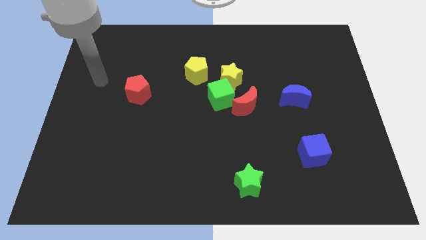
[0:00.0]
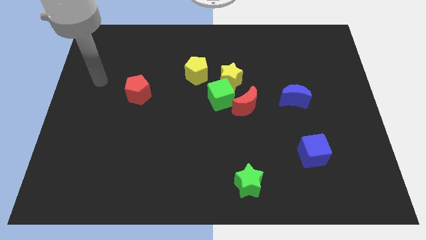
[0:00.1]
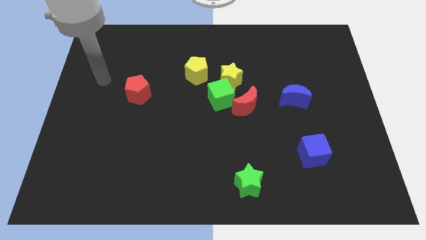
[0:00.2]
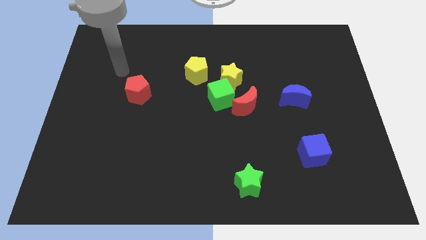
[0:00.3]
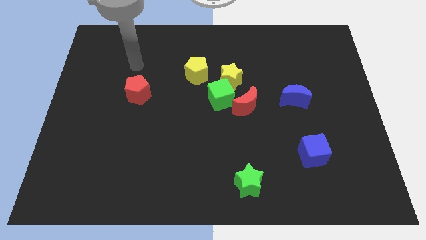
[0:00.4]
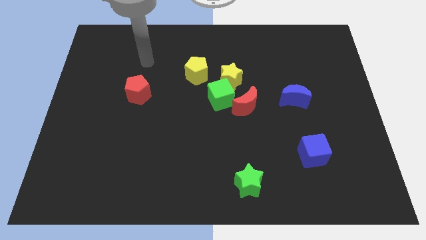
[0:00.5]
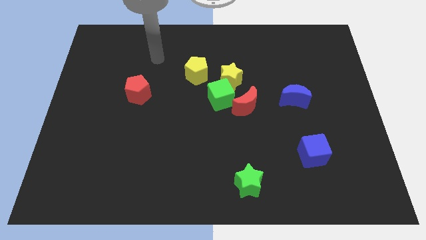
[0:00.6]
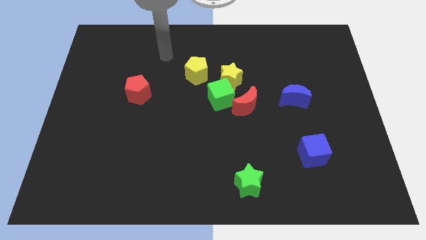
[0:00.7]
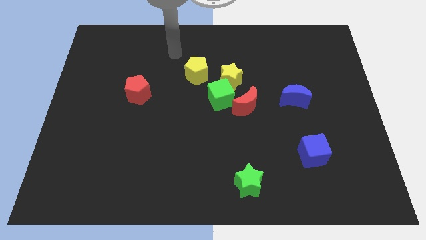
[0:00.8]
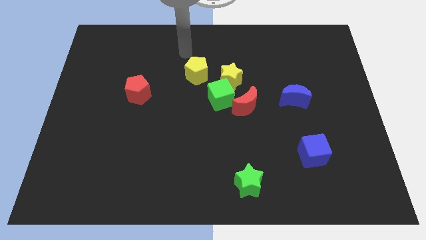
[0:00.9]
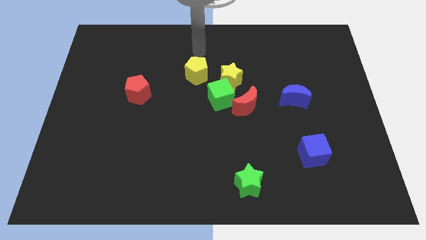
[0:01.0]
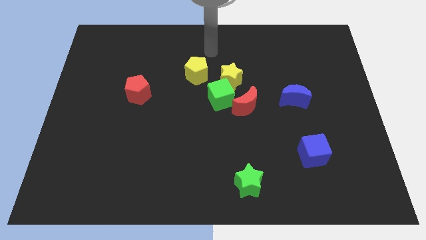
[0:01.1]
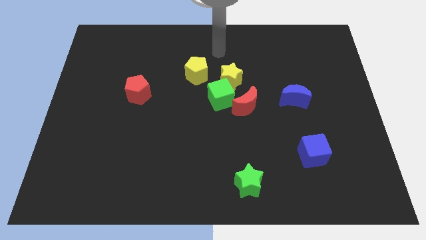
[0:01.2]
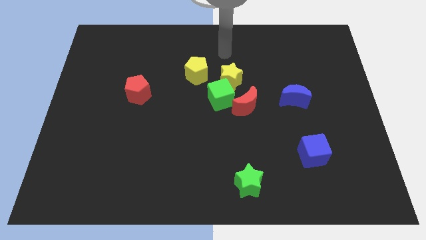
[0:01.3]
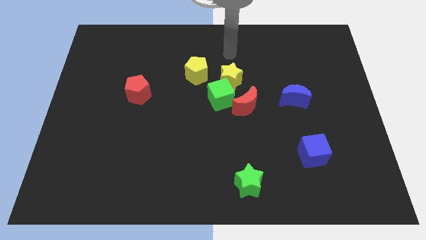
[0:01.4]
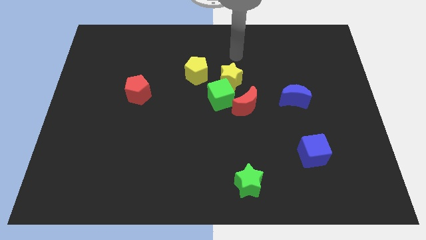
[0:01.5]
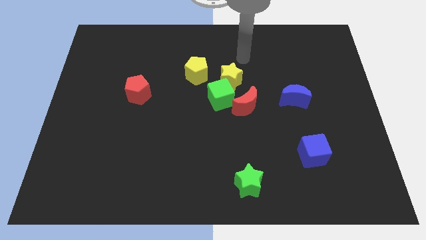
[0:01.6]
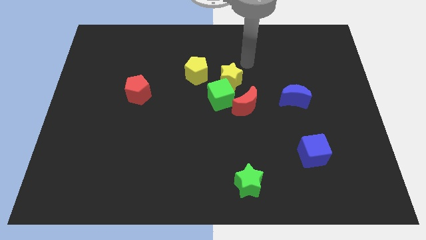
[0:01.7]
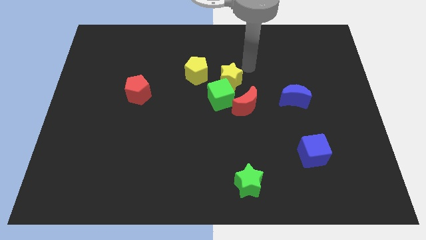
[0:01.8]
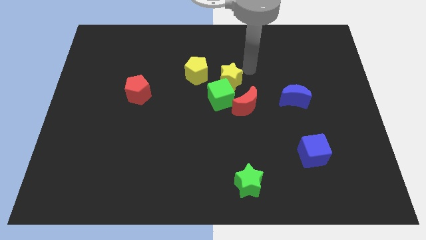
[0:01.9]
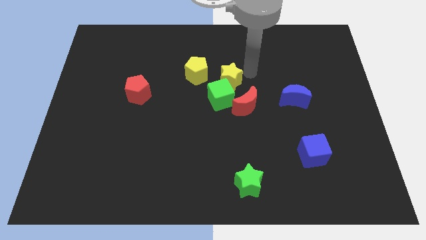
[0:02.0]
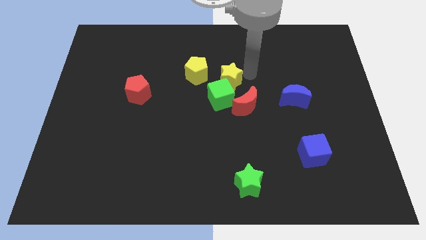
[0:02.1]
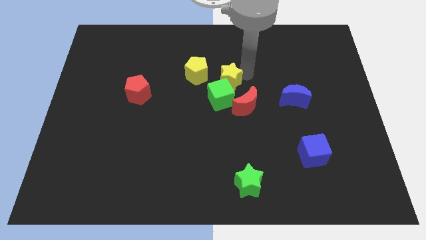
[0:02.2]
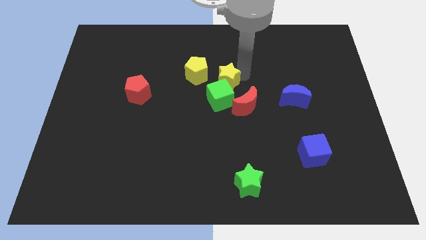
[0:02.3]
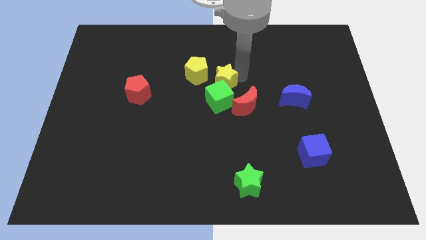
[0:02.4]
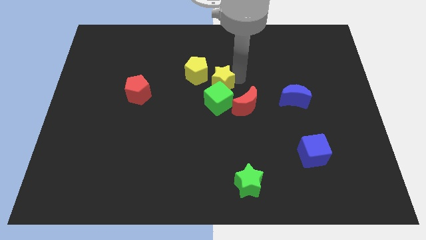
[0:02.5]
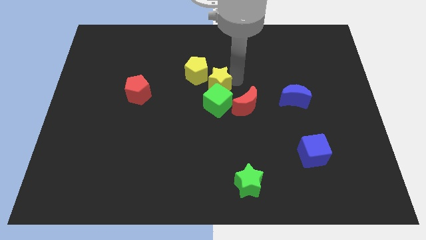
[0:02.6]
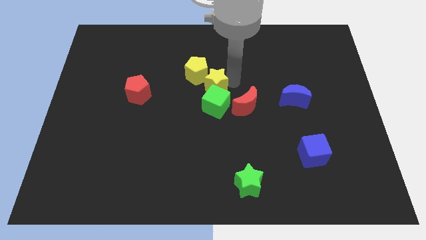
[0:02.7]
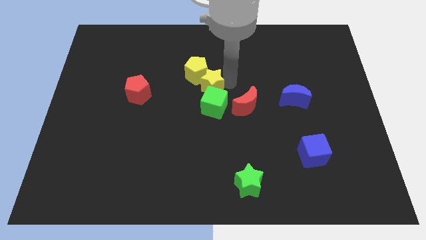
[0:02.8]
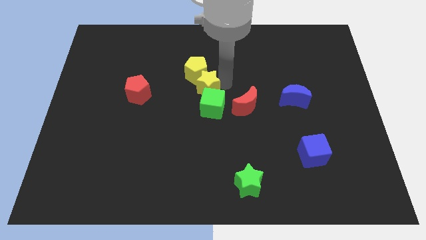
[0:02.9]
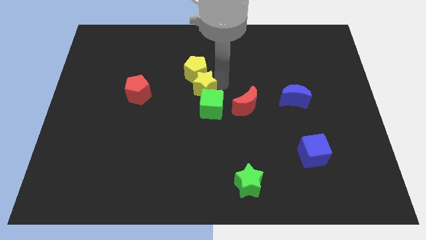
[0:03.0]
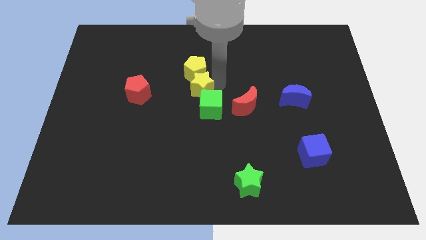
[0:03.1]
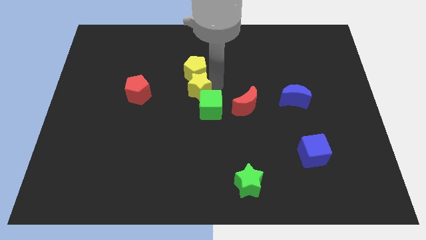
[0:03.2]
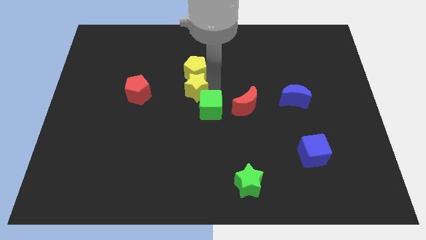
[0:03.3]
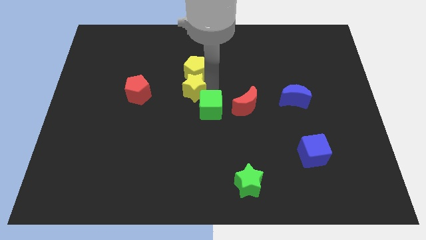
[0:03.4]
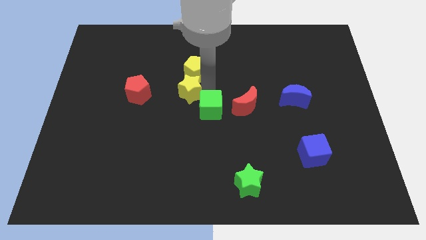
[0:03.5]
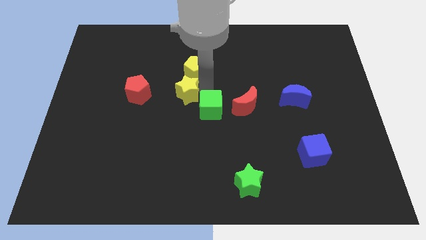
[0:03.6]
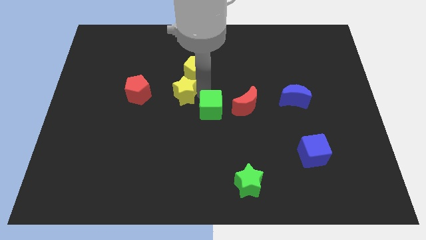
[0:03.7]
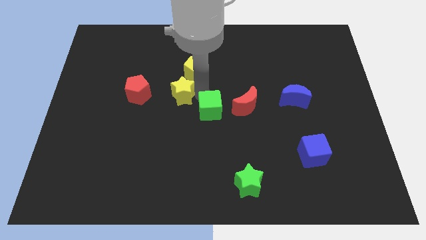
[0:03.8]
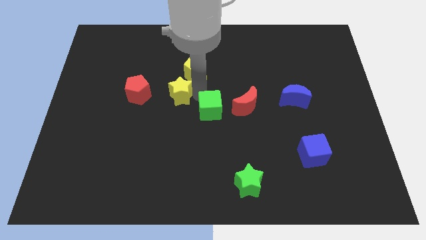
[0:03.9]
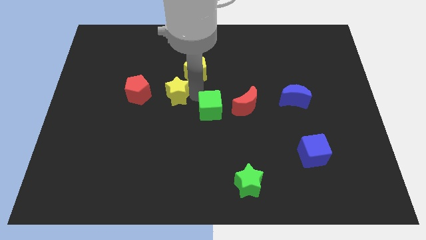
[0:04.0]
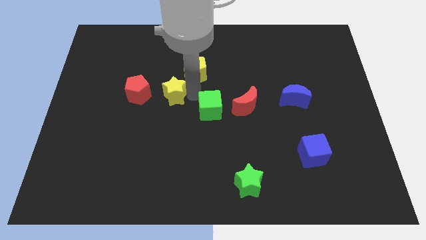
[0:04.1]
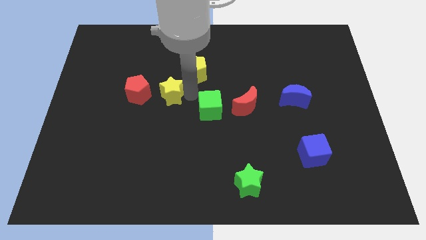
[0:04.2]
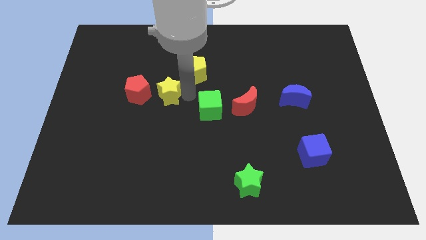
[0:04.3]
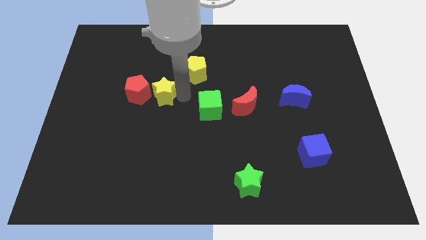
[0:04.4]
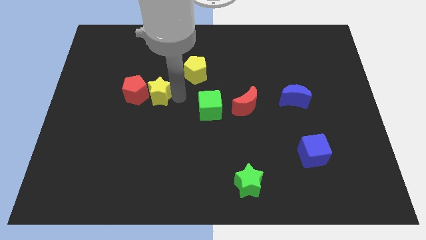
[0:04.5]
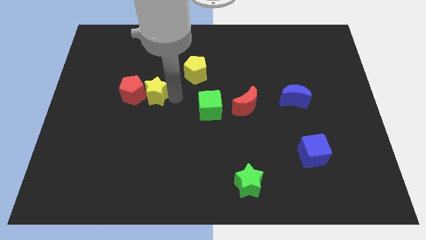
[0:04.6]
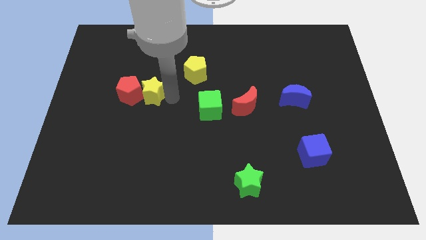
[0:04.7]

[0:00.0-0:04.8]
slide the yellow star next to the red pentagon

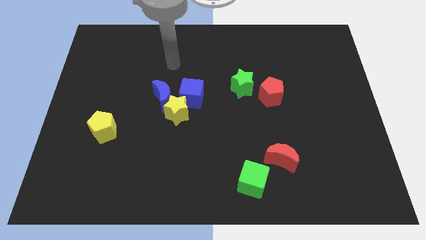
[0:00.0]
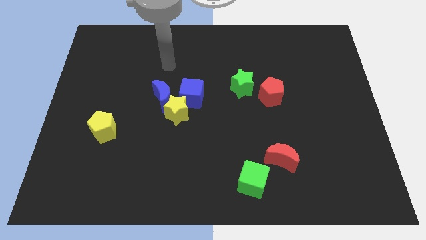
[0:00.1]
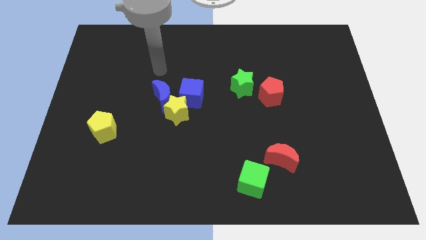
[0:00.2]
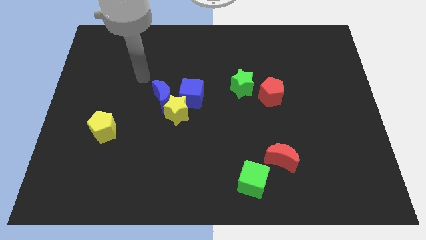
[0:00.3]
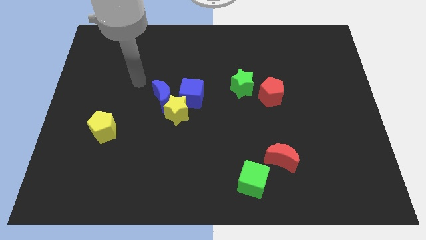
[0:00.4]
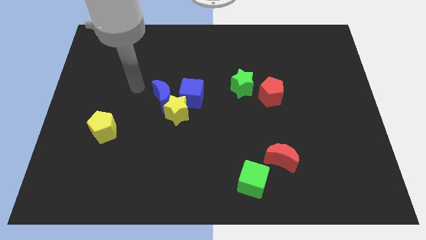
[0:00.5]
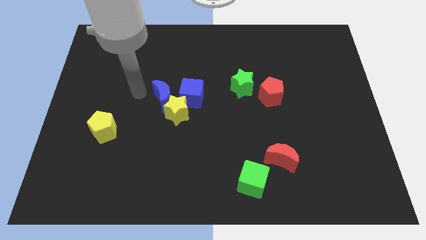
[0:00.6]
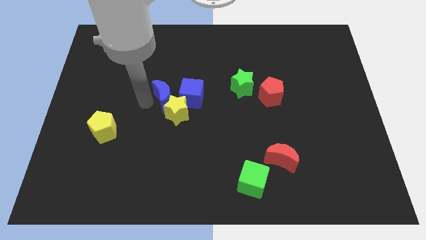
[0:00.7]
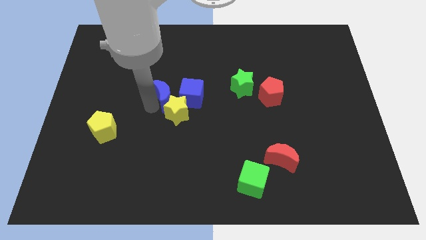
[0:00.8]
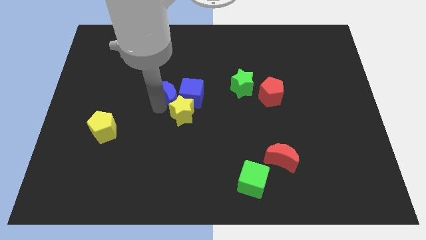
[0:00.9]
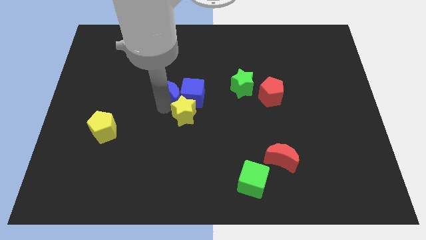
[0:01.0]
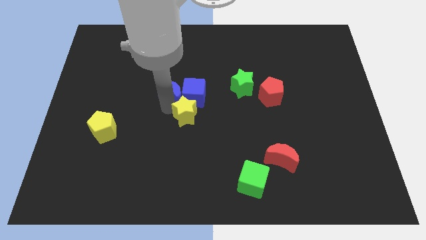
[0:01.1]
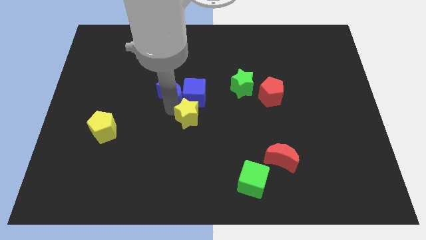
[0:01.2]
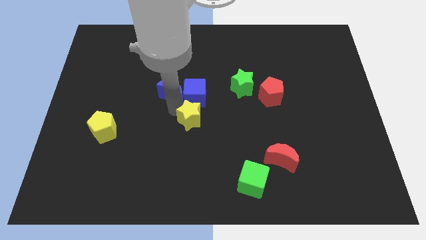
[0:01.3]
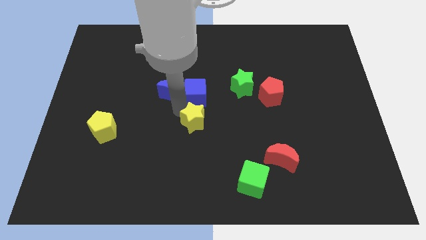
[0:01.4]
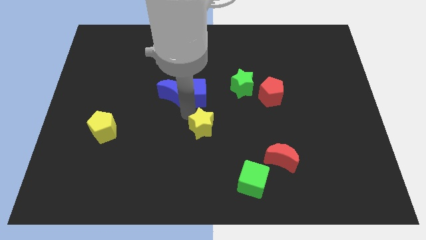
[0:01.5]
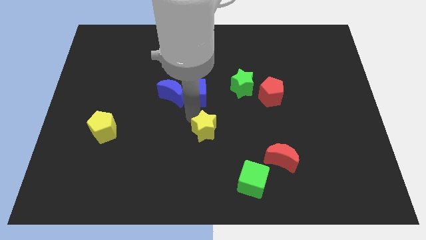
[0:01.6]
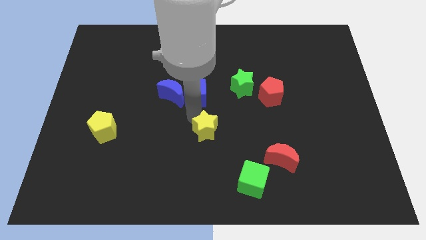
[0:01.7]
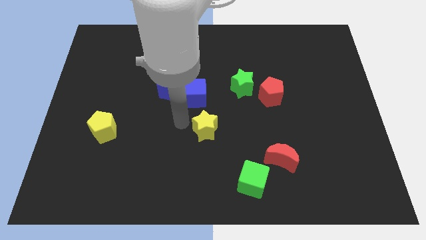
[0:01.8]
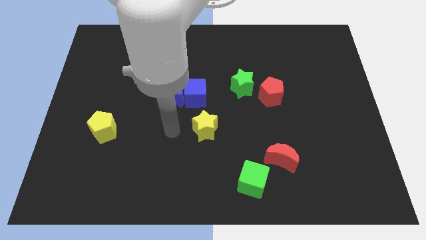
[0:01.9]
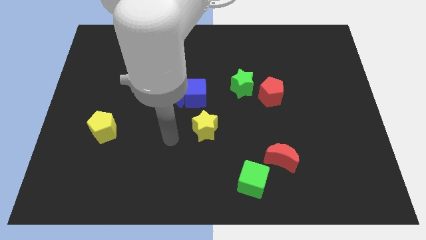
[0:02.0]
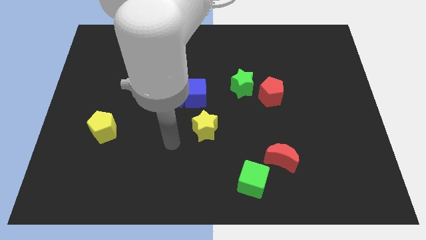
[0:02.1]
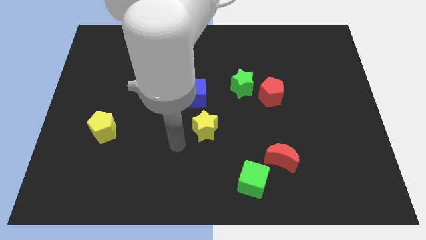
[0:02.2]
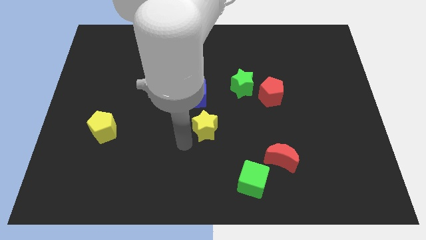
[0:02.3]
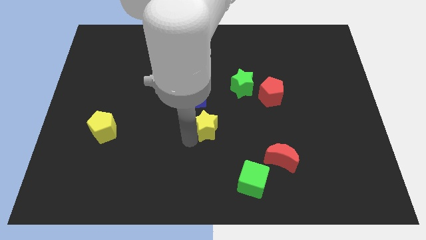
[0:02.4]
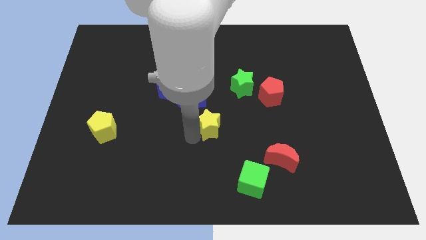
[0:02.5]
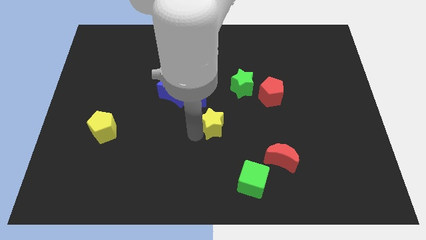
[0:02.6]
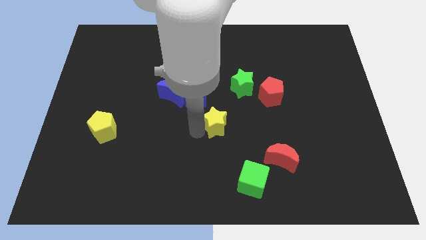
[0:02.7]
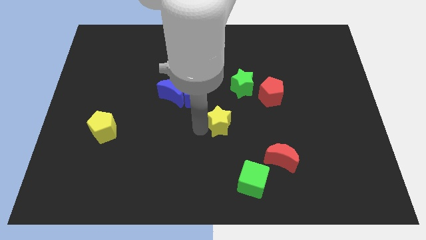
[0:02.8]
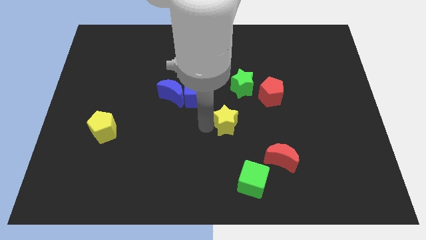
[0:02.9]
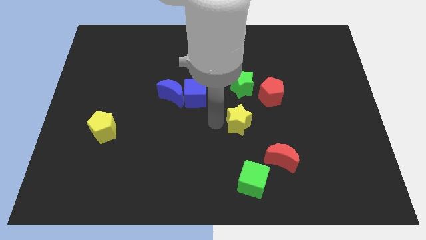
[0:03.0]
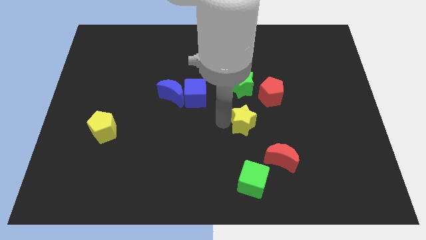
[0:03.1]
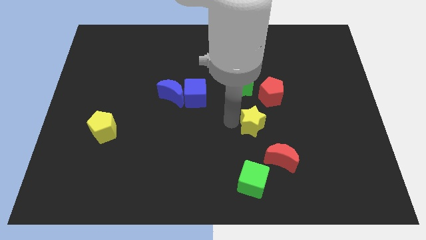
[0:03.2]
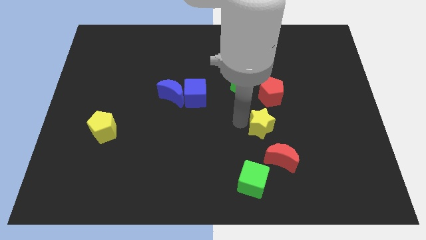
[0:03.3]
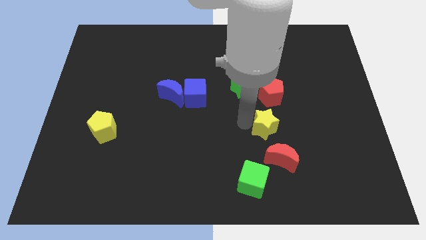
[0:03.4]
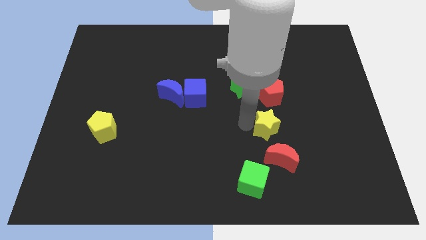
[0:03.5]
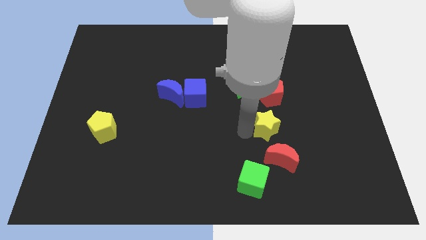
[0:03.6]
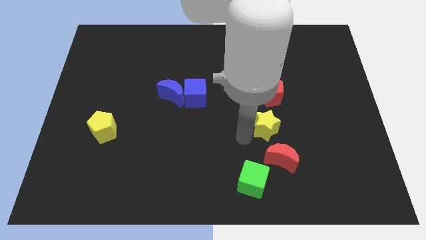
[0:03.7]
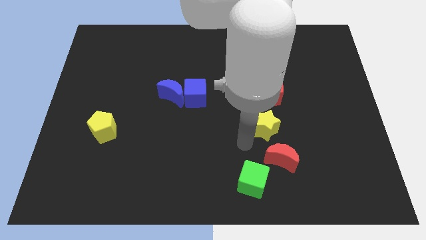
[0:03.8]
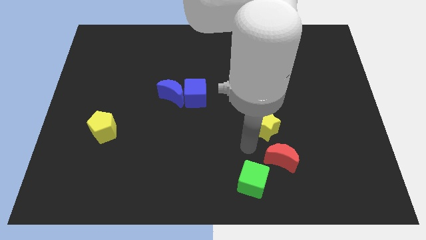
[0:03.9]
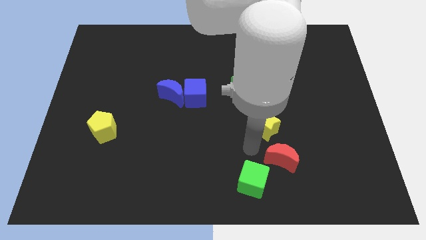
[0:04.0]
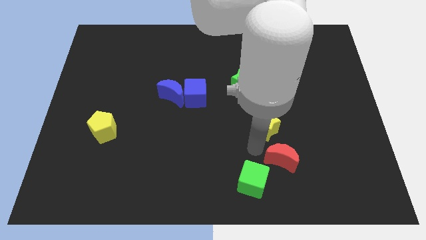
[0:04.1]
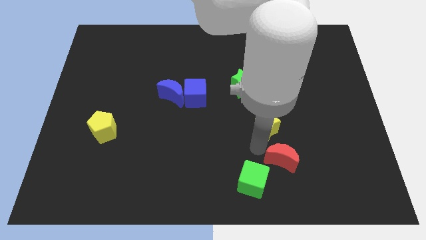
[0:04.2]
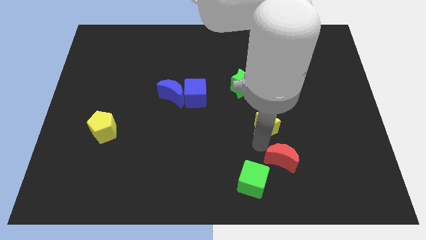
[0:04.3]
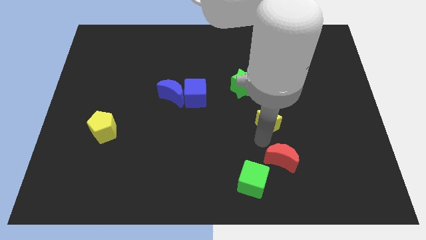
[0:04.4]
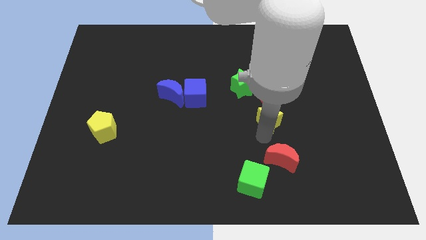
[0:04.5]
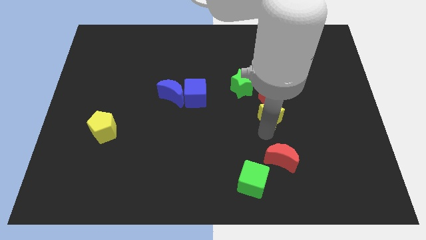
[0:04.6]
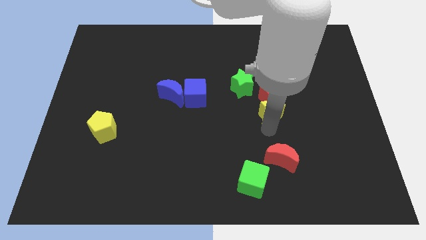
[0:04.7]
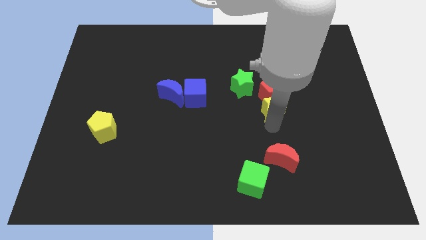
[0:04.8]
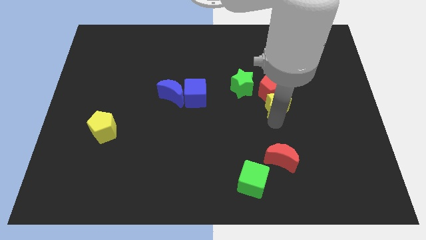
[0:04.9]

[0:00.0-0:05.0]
put the yellow star close to the red pentagon
